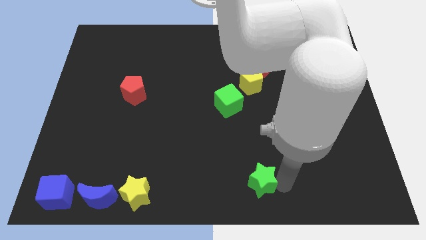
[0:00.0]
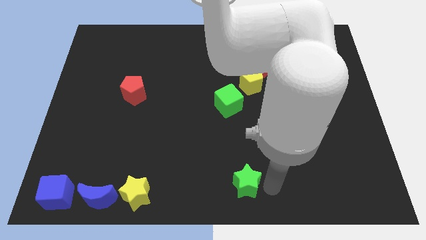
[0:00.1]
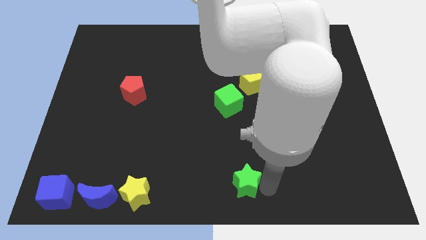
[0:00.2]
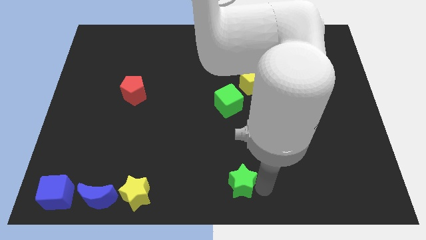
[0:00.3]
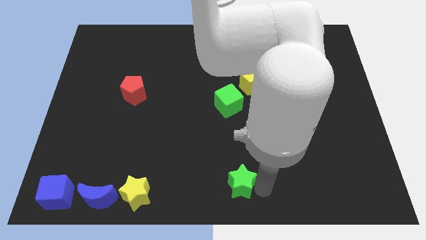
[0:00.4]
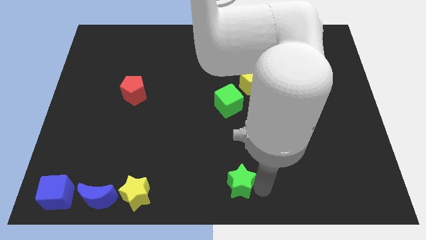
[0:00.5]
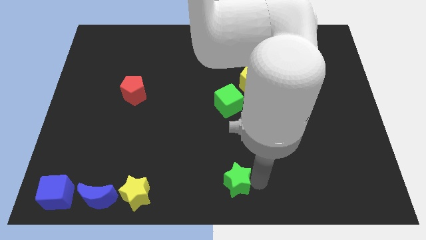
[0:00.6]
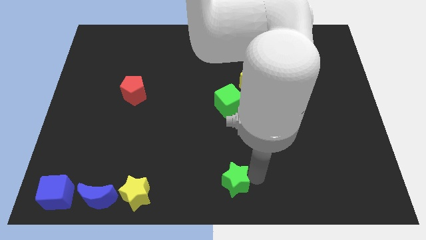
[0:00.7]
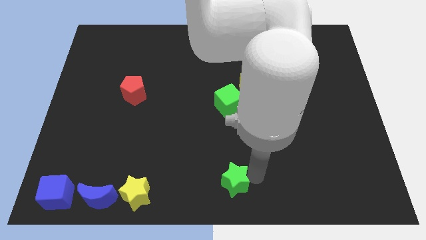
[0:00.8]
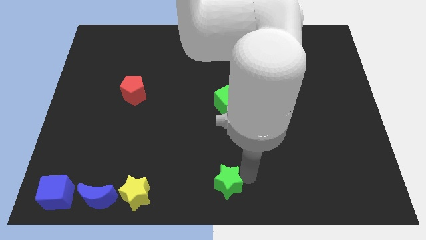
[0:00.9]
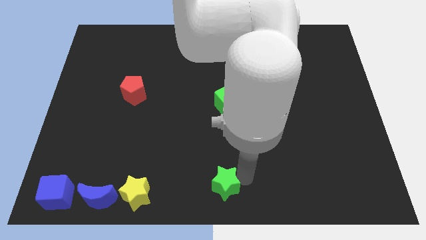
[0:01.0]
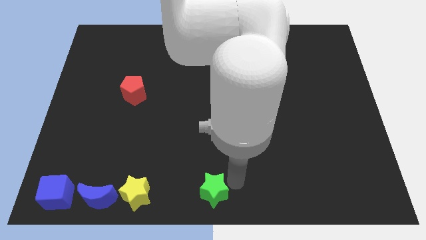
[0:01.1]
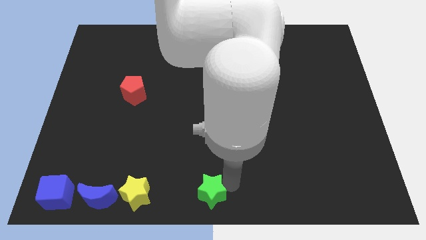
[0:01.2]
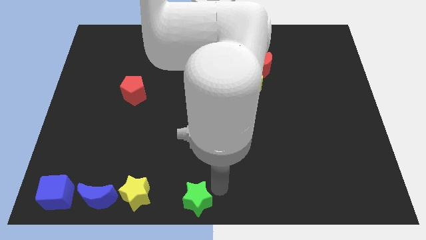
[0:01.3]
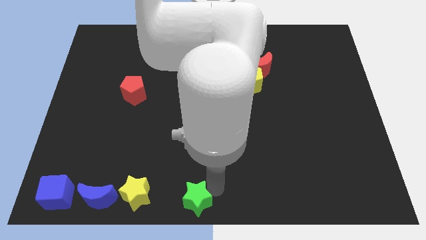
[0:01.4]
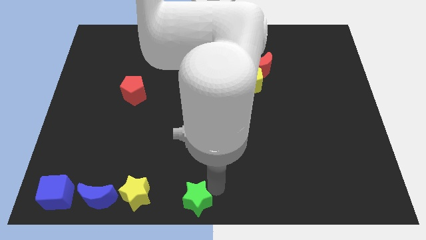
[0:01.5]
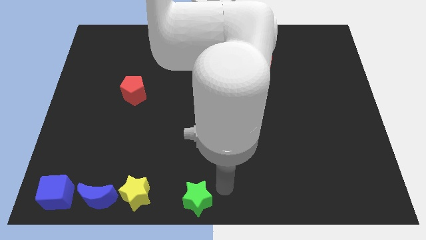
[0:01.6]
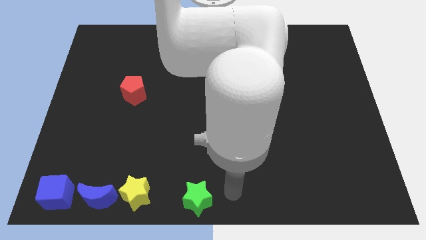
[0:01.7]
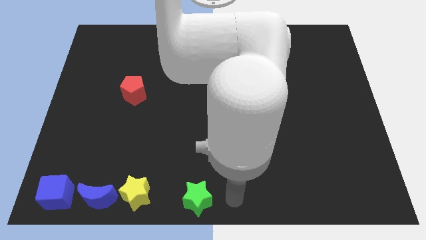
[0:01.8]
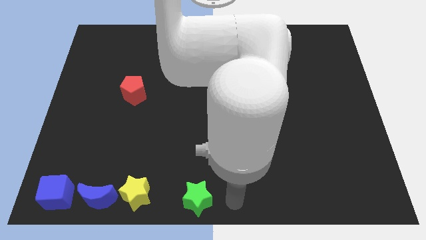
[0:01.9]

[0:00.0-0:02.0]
place green star beside yellow star

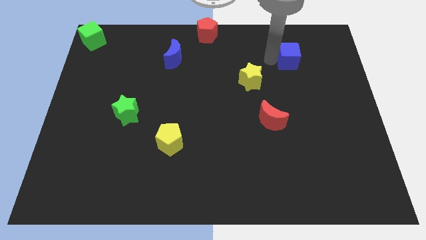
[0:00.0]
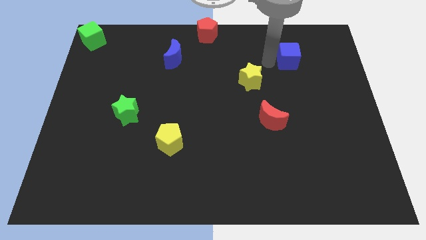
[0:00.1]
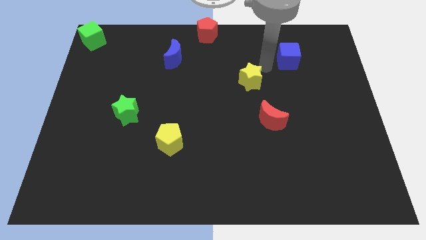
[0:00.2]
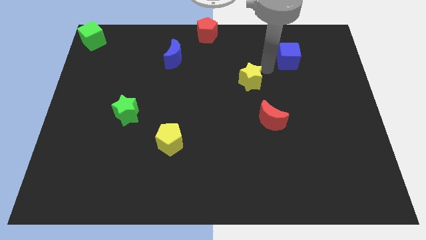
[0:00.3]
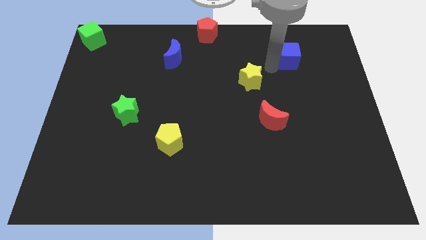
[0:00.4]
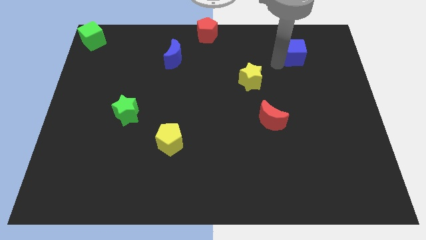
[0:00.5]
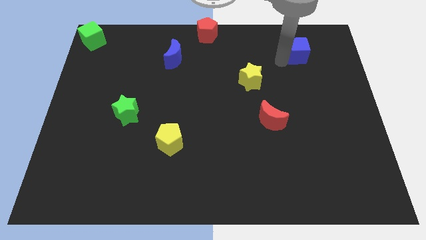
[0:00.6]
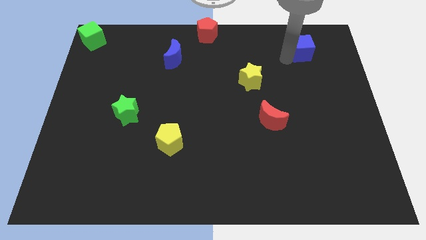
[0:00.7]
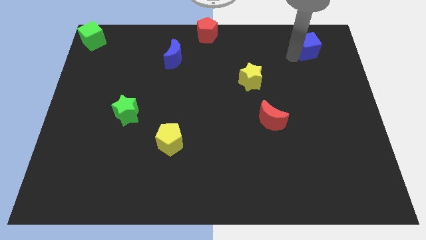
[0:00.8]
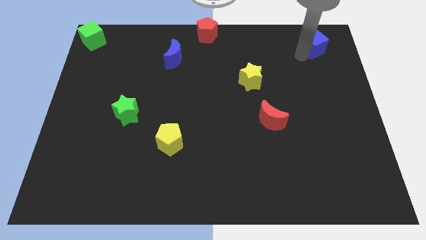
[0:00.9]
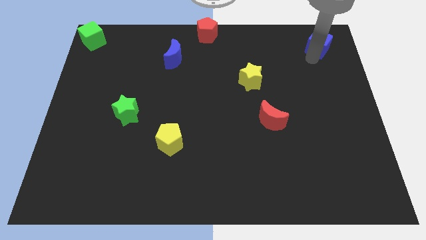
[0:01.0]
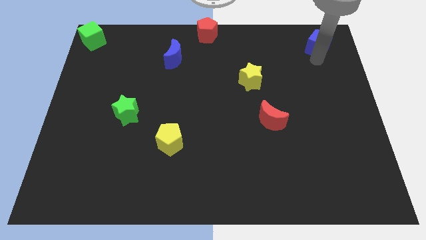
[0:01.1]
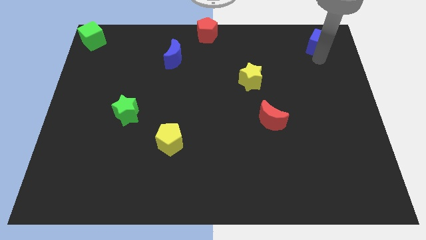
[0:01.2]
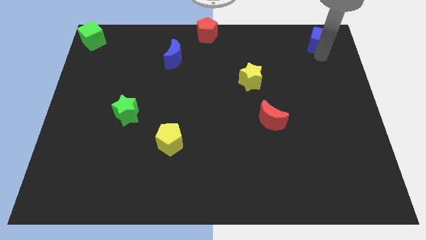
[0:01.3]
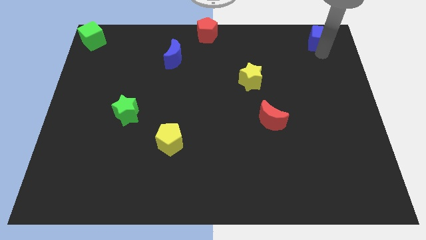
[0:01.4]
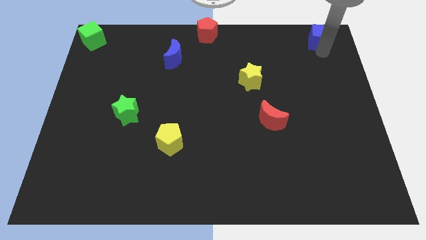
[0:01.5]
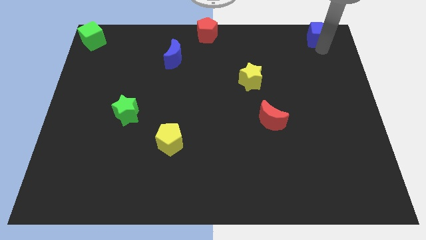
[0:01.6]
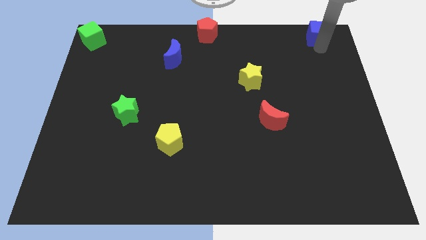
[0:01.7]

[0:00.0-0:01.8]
push the blue cube to the top right

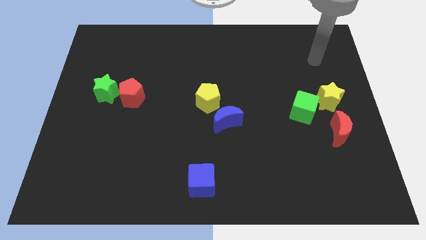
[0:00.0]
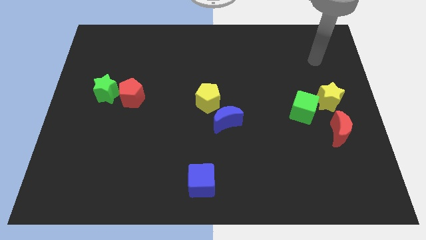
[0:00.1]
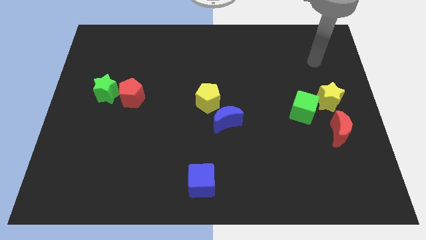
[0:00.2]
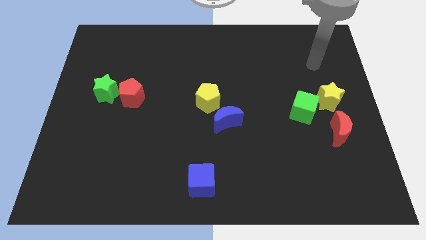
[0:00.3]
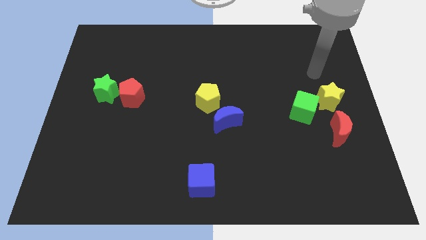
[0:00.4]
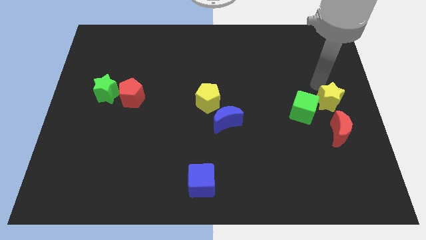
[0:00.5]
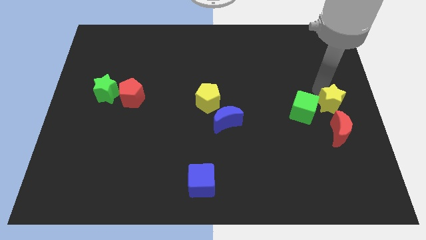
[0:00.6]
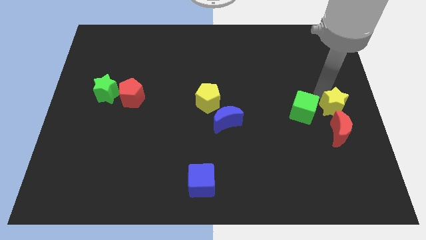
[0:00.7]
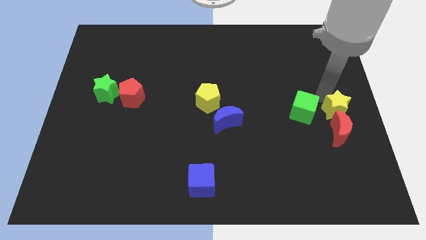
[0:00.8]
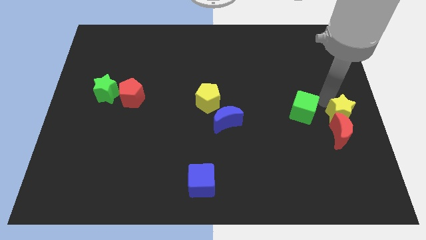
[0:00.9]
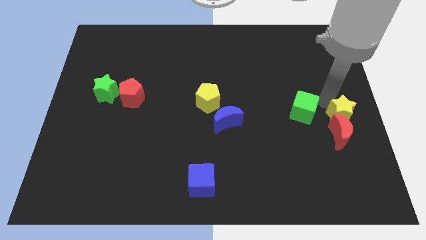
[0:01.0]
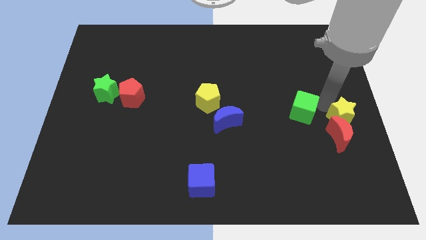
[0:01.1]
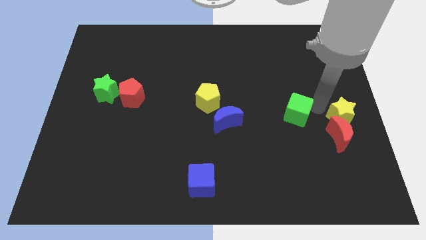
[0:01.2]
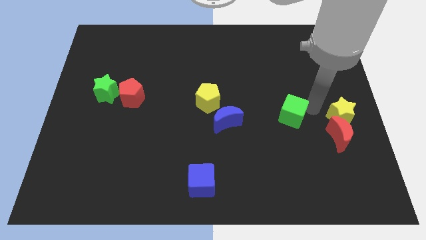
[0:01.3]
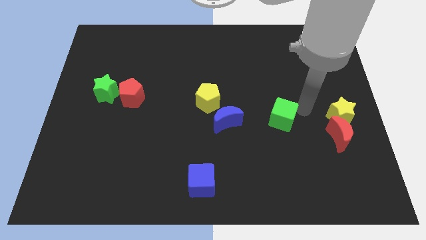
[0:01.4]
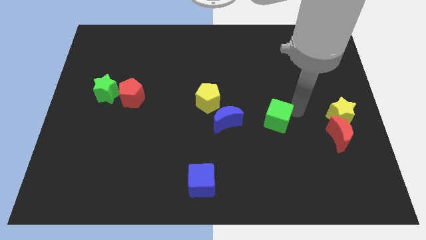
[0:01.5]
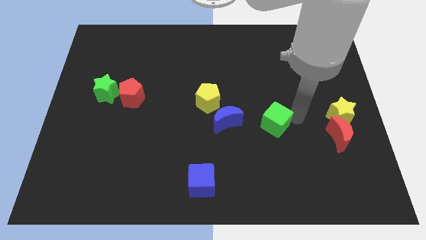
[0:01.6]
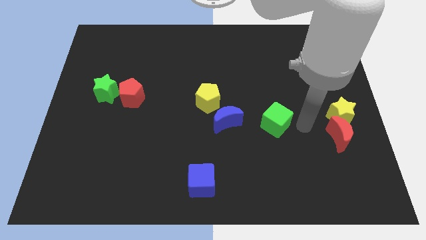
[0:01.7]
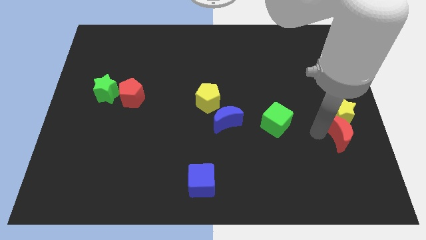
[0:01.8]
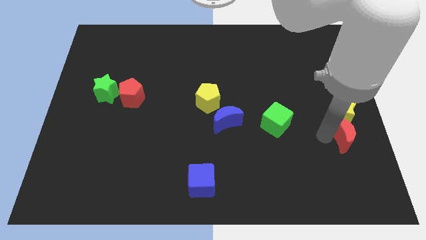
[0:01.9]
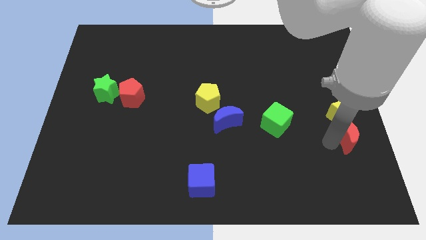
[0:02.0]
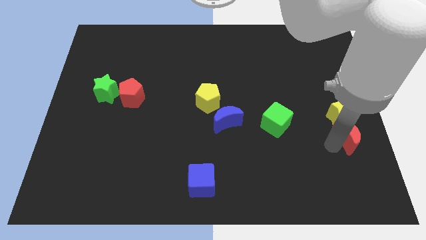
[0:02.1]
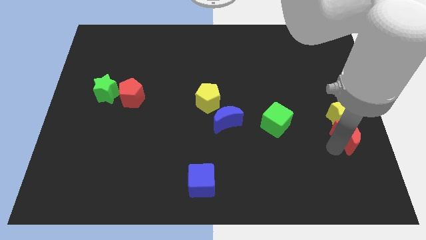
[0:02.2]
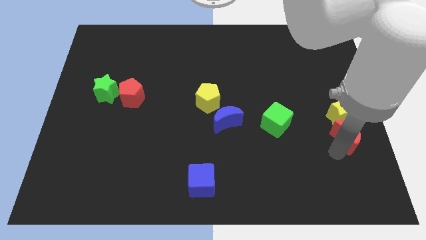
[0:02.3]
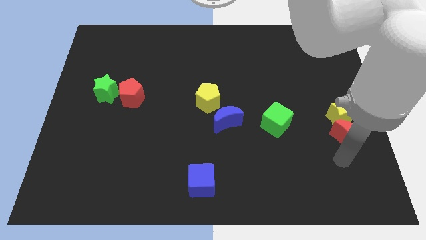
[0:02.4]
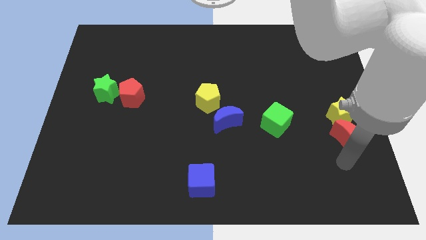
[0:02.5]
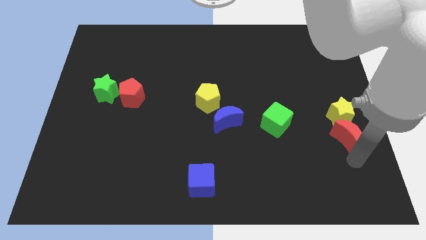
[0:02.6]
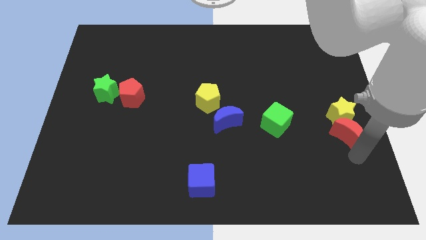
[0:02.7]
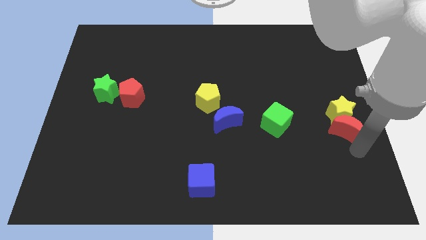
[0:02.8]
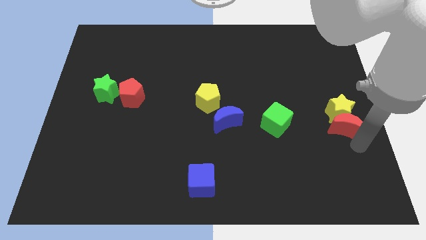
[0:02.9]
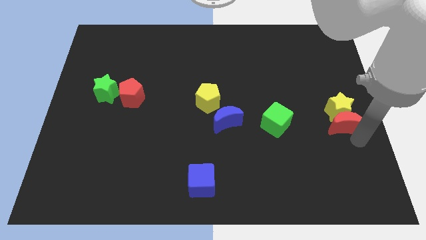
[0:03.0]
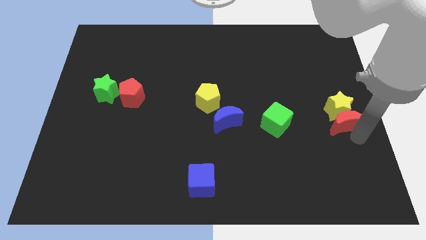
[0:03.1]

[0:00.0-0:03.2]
separate the green cube from the yellow star

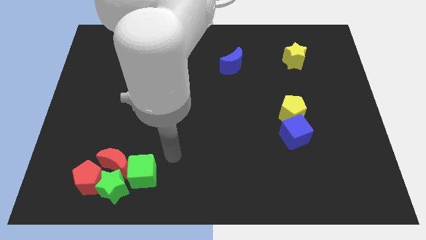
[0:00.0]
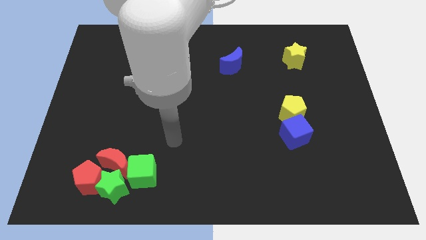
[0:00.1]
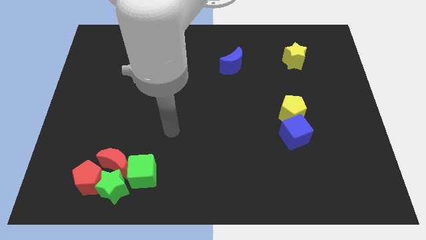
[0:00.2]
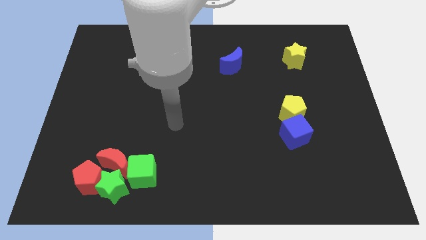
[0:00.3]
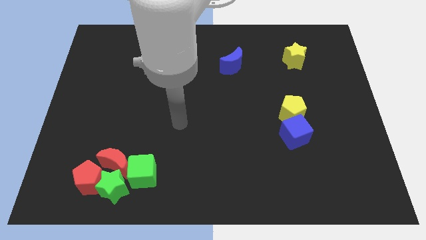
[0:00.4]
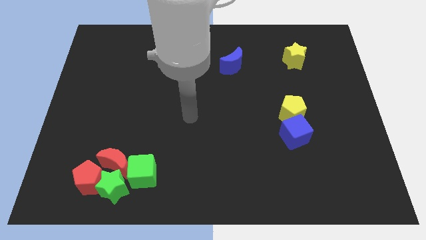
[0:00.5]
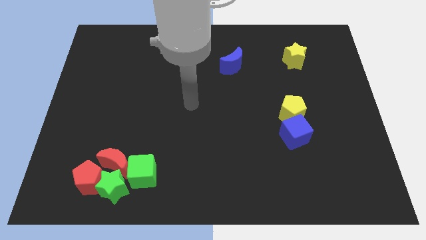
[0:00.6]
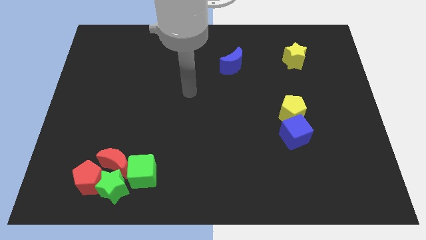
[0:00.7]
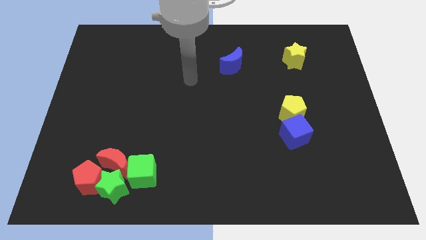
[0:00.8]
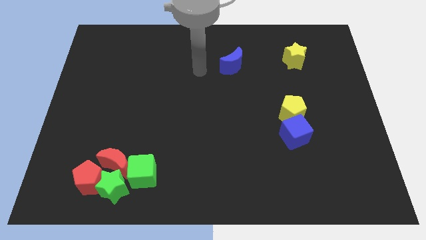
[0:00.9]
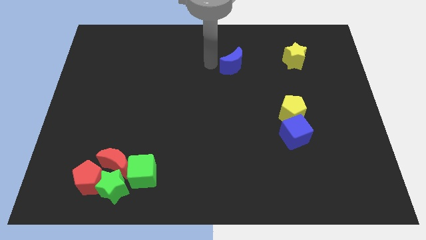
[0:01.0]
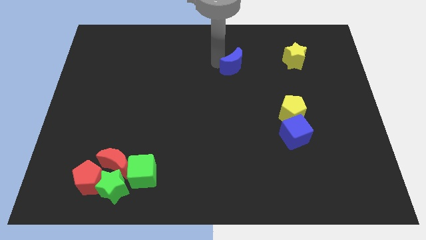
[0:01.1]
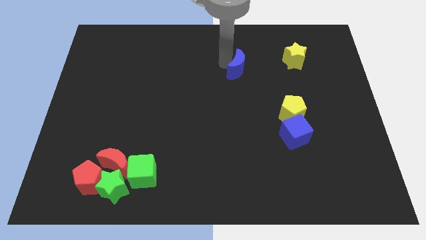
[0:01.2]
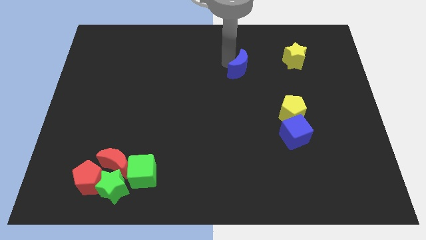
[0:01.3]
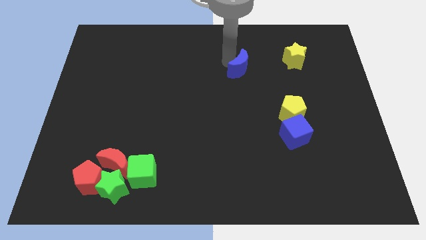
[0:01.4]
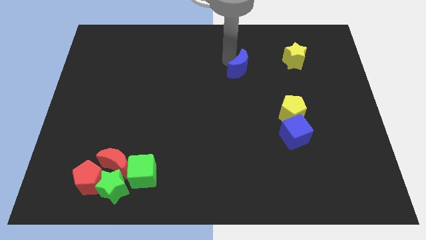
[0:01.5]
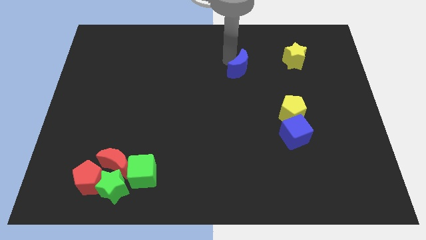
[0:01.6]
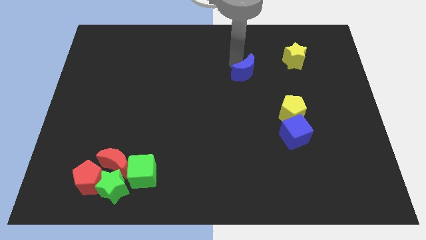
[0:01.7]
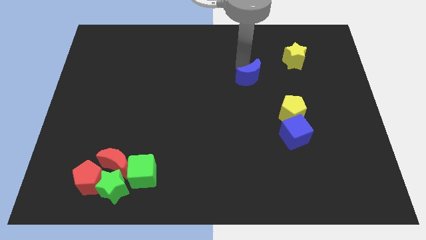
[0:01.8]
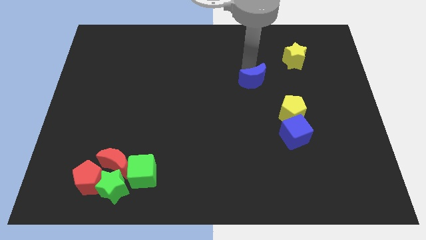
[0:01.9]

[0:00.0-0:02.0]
move the blue moon slightly towards the yellow pentagon
